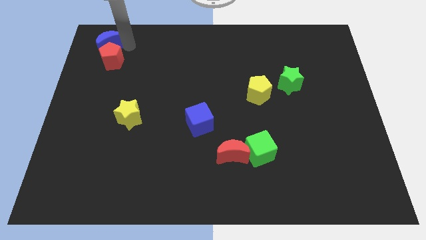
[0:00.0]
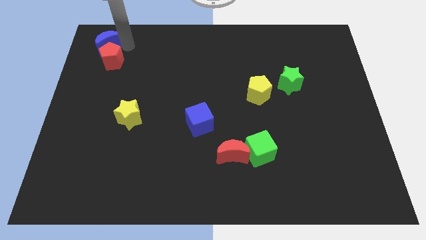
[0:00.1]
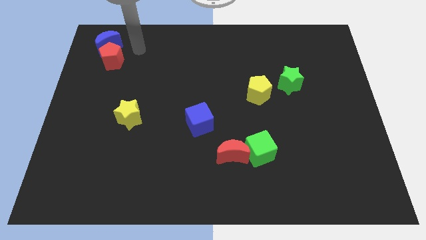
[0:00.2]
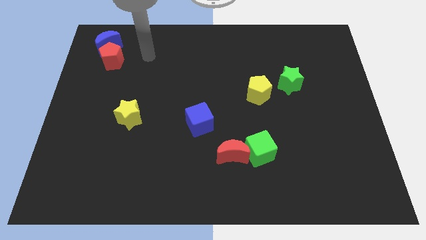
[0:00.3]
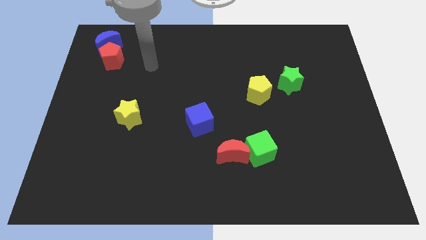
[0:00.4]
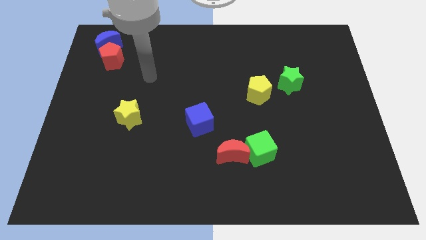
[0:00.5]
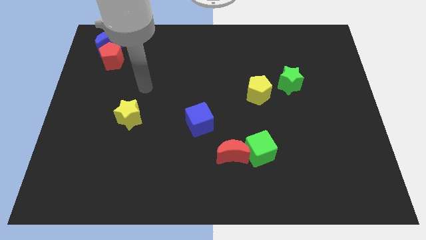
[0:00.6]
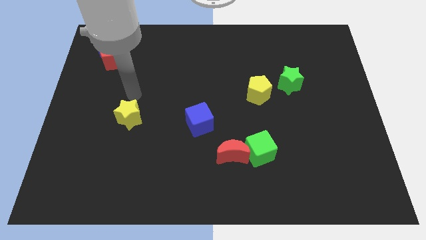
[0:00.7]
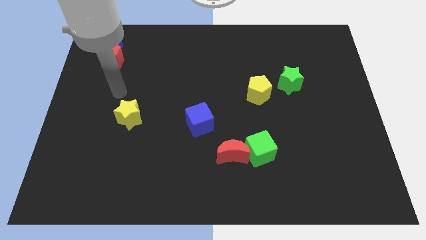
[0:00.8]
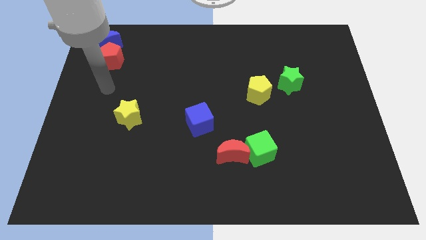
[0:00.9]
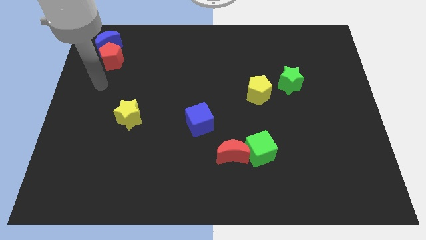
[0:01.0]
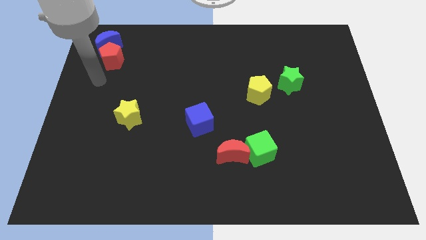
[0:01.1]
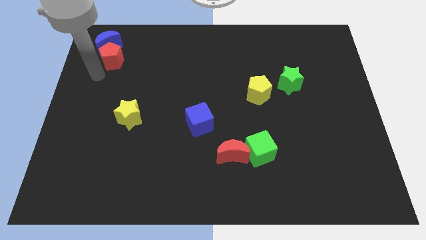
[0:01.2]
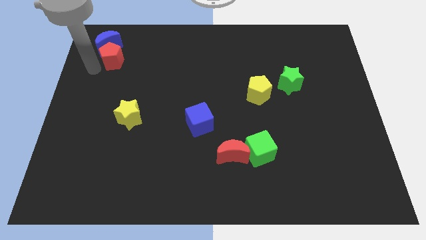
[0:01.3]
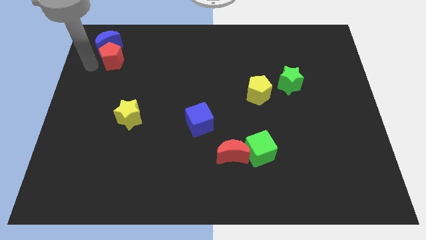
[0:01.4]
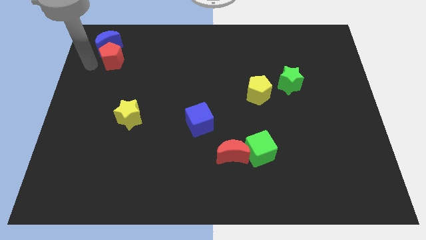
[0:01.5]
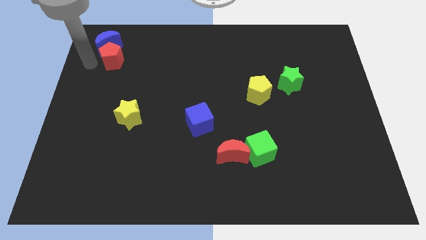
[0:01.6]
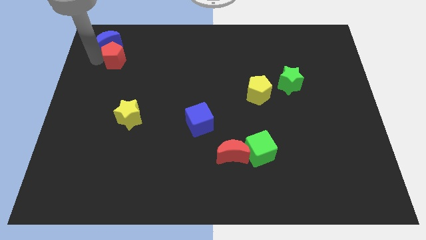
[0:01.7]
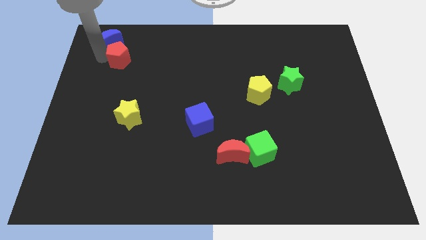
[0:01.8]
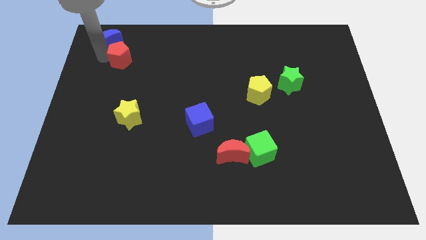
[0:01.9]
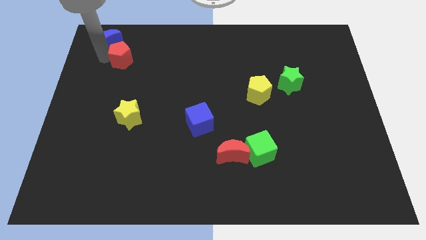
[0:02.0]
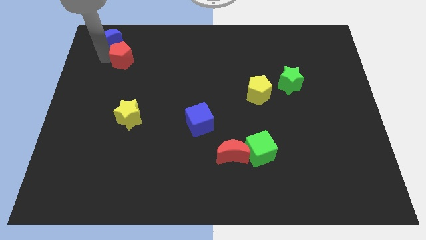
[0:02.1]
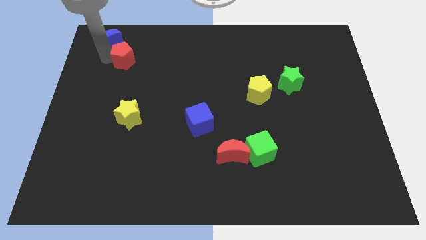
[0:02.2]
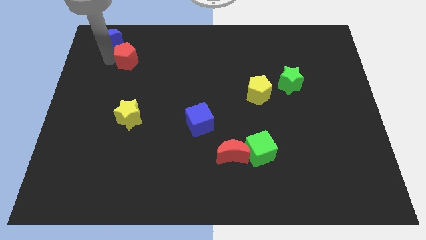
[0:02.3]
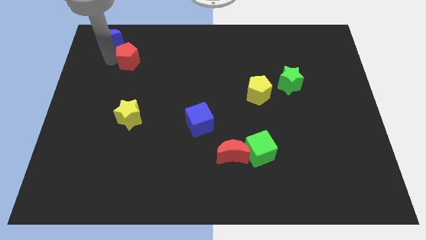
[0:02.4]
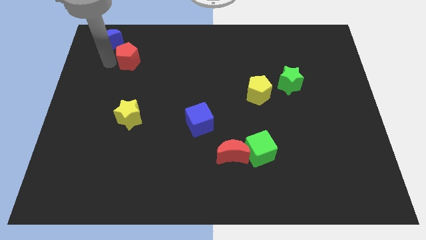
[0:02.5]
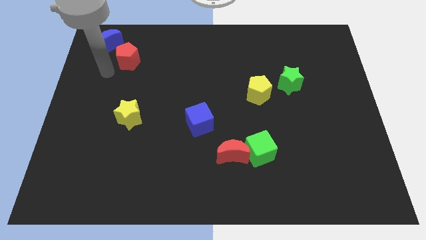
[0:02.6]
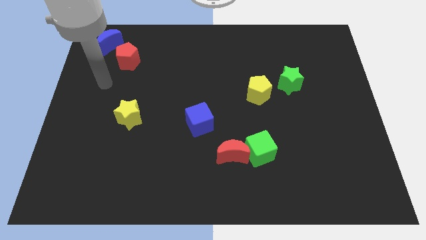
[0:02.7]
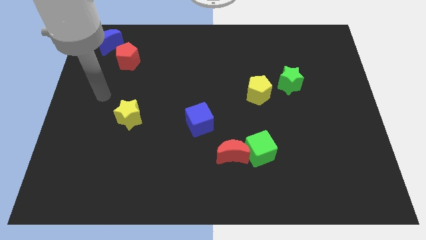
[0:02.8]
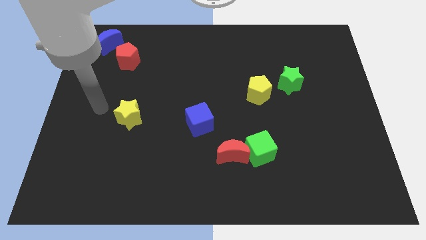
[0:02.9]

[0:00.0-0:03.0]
push red pentagon and blue crescent apart from each other

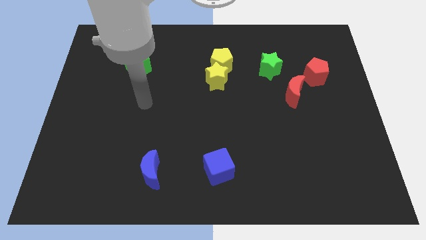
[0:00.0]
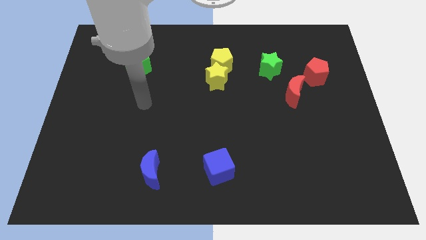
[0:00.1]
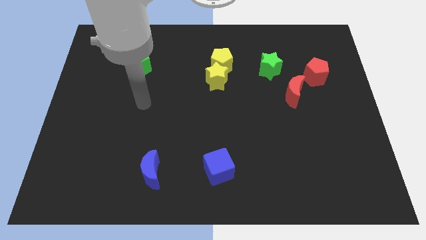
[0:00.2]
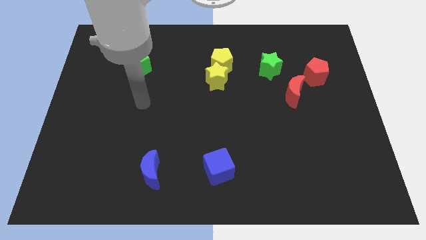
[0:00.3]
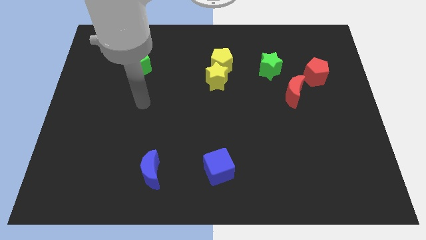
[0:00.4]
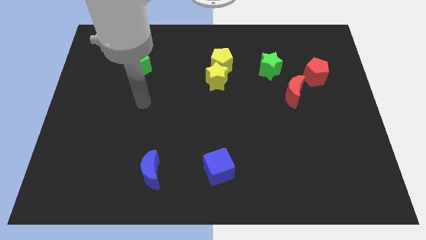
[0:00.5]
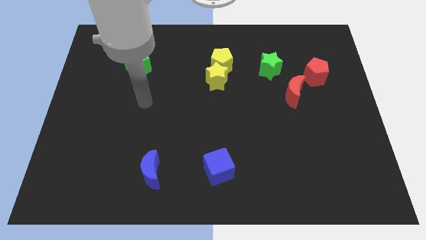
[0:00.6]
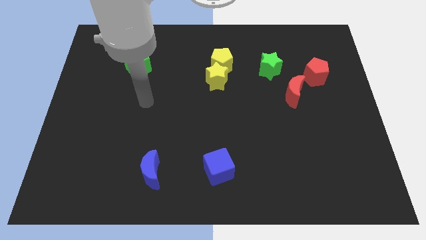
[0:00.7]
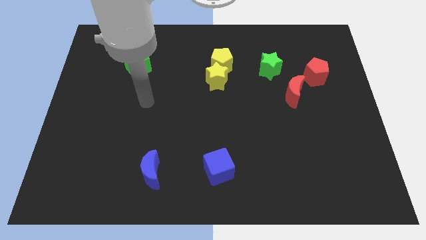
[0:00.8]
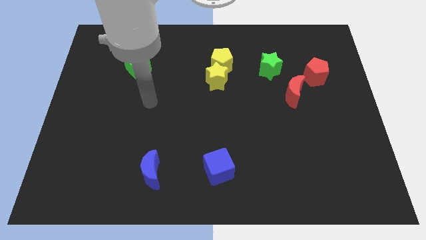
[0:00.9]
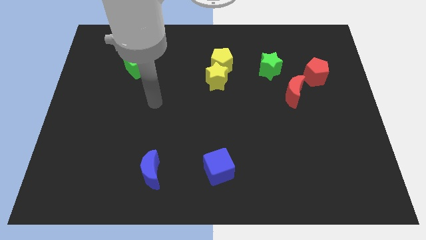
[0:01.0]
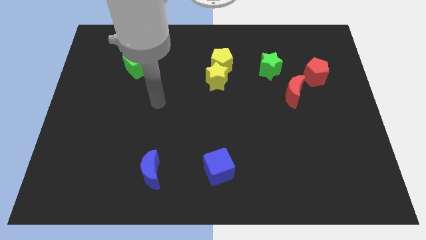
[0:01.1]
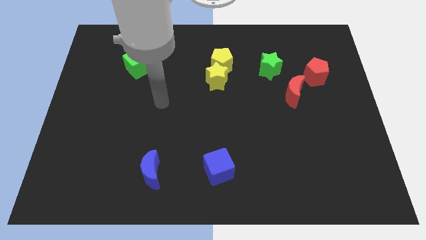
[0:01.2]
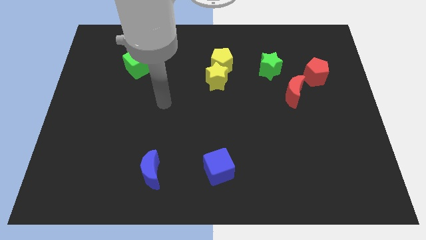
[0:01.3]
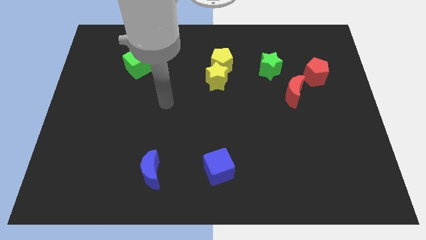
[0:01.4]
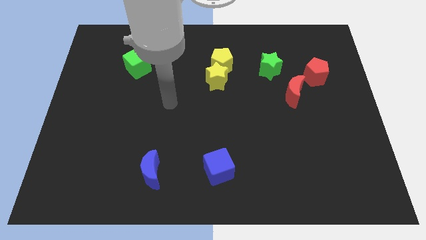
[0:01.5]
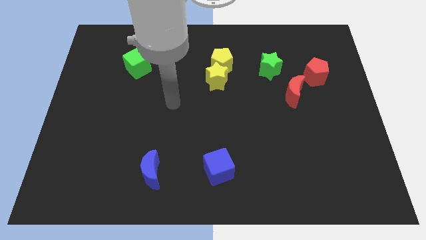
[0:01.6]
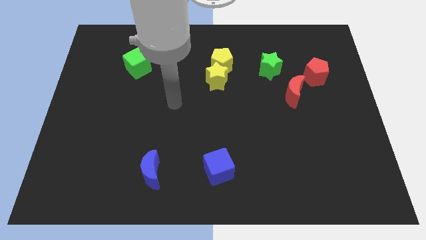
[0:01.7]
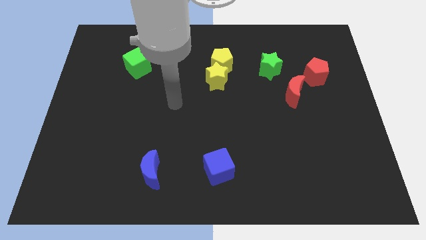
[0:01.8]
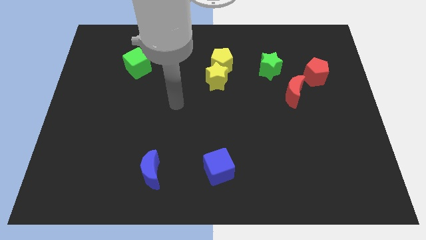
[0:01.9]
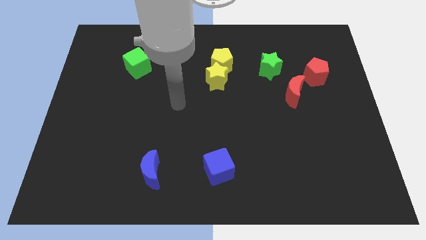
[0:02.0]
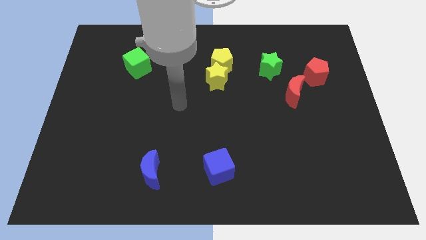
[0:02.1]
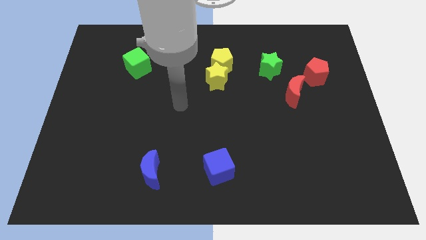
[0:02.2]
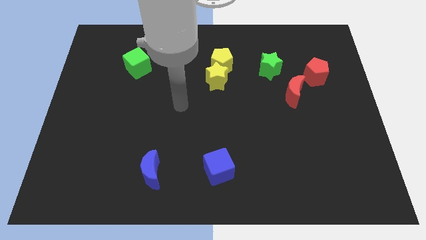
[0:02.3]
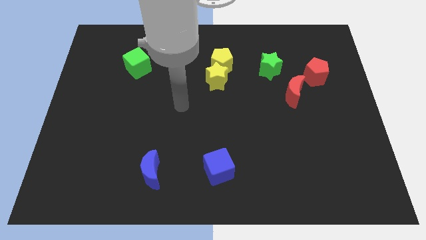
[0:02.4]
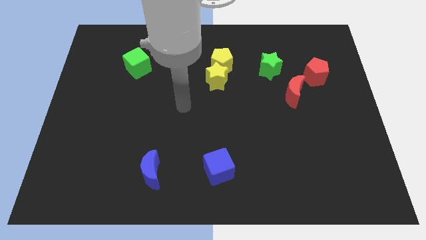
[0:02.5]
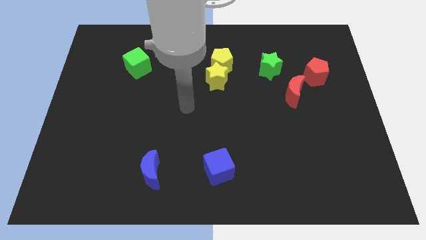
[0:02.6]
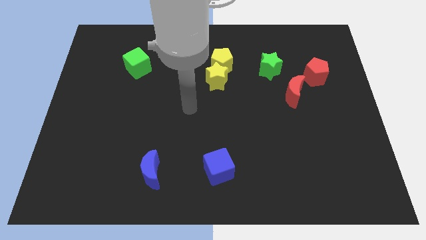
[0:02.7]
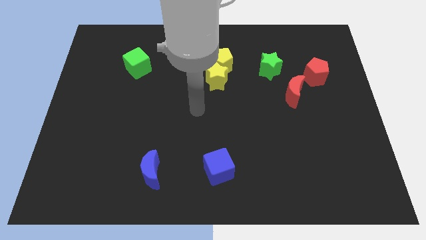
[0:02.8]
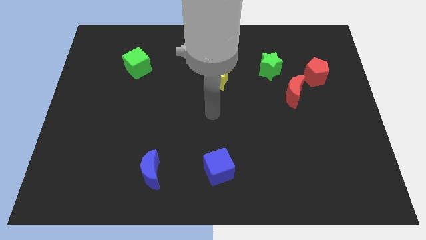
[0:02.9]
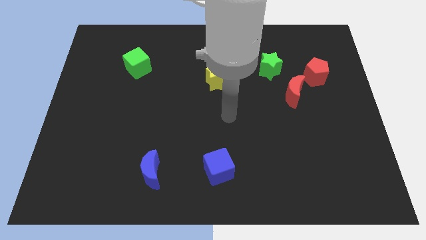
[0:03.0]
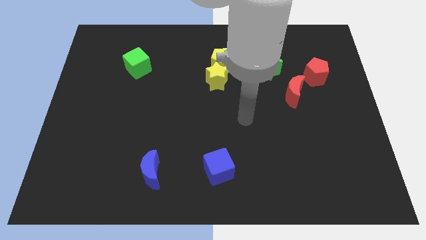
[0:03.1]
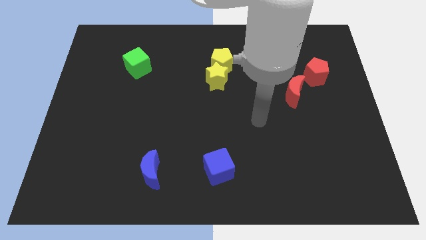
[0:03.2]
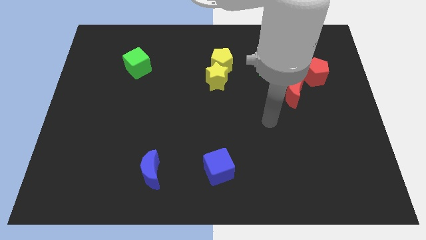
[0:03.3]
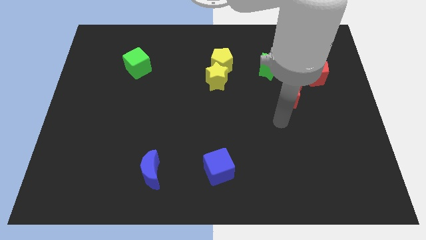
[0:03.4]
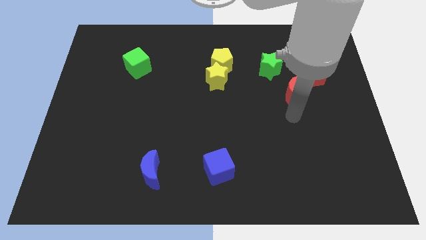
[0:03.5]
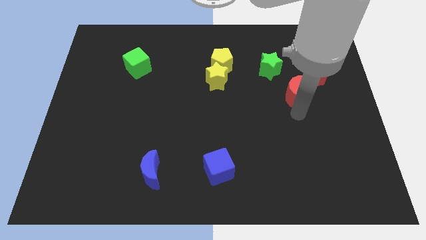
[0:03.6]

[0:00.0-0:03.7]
point your arm at the bottom of the red crescent

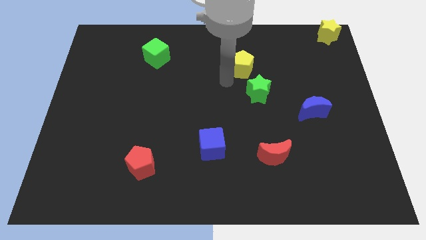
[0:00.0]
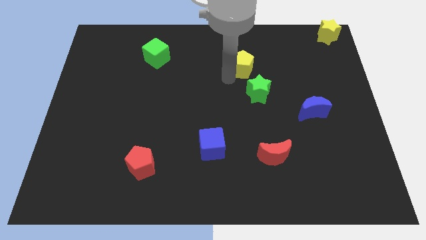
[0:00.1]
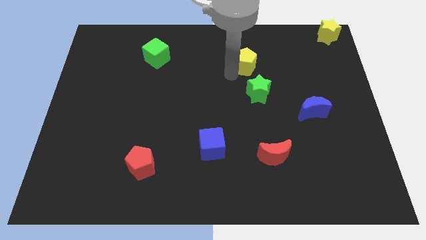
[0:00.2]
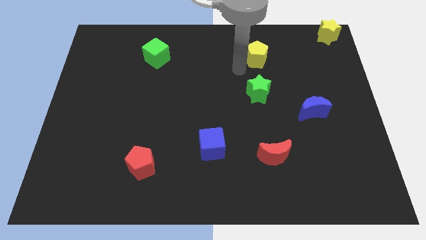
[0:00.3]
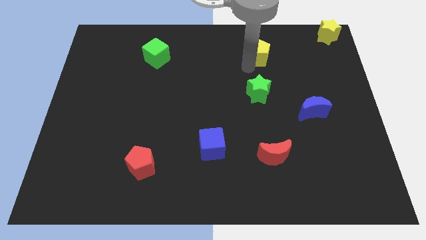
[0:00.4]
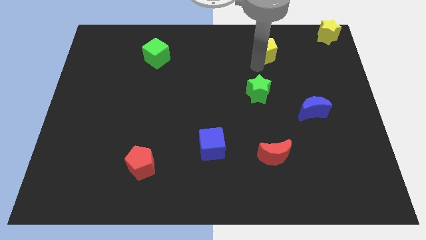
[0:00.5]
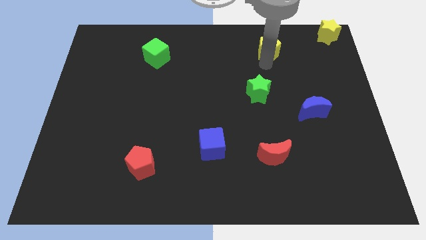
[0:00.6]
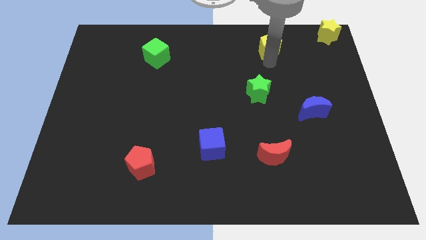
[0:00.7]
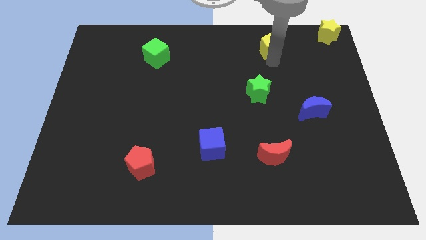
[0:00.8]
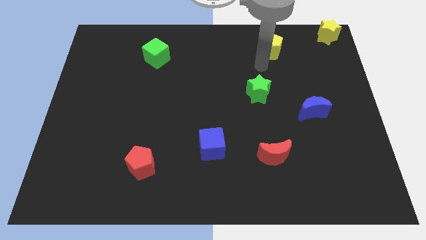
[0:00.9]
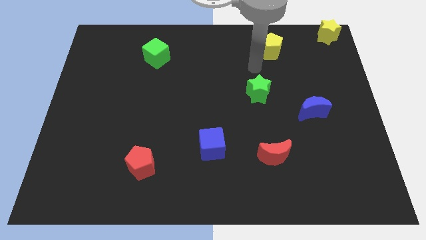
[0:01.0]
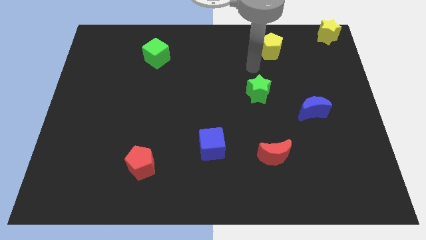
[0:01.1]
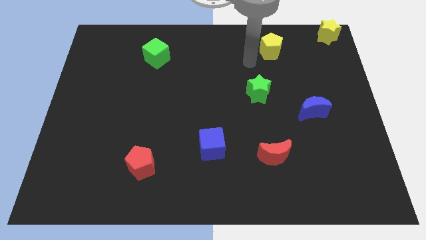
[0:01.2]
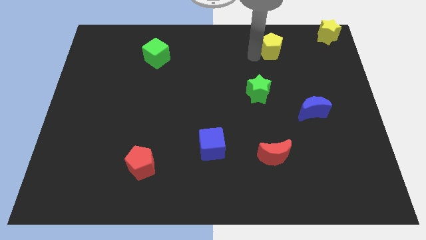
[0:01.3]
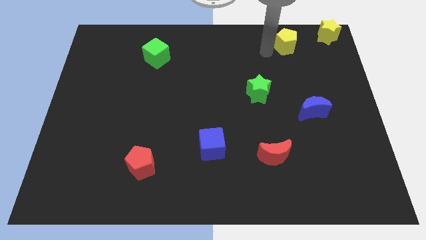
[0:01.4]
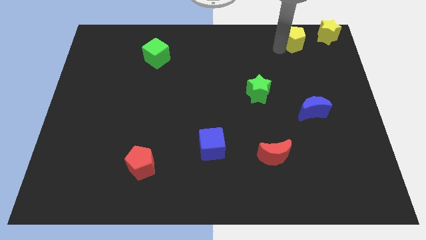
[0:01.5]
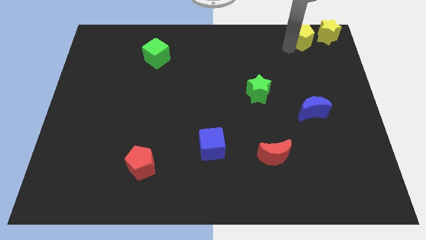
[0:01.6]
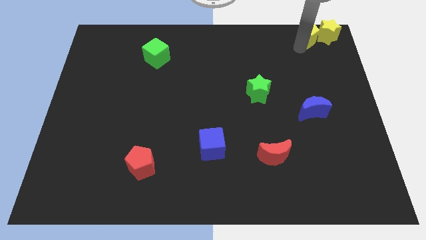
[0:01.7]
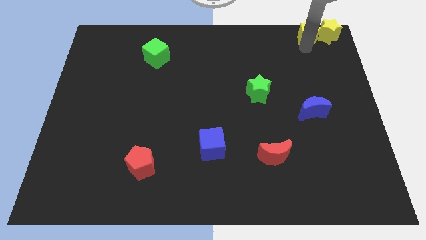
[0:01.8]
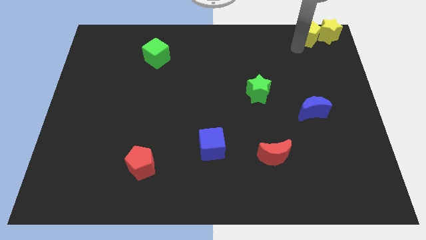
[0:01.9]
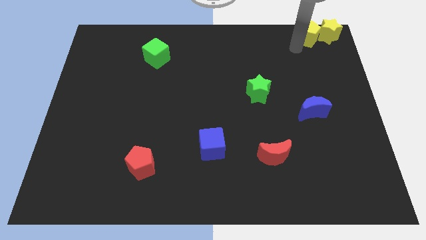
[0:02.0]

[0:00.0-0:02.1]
push the yellow pentagon towards the yellow star

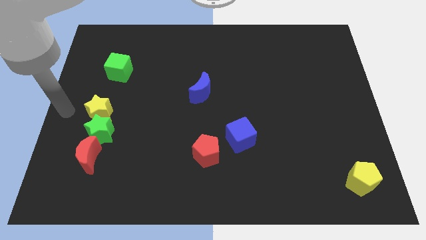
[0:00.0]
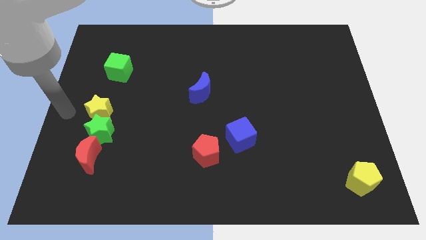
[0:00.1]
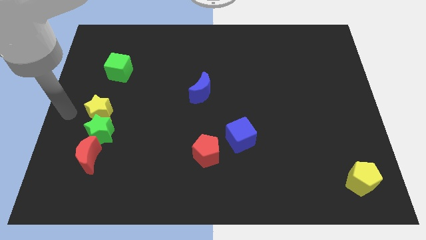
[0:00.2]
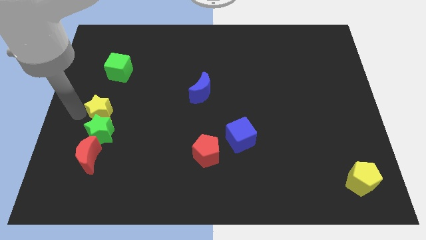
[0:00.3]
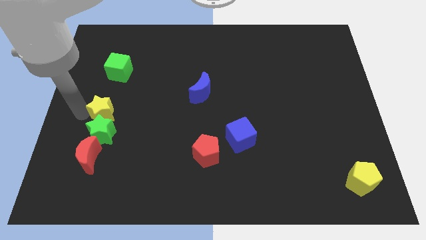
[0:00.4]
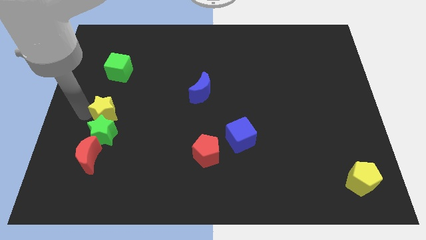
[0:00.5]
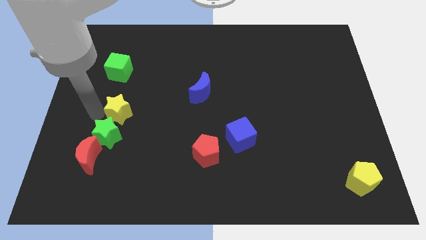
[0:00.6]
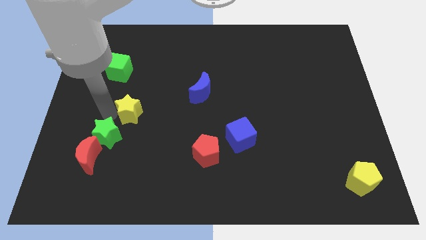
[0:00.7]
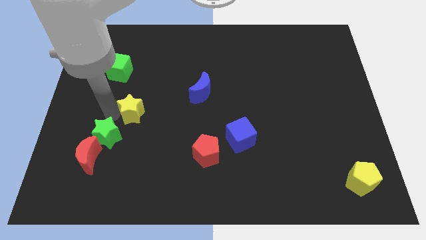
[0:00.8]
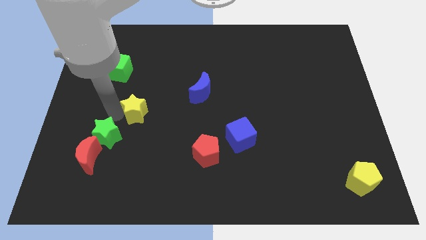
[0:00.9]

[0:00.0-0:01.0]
seperate yellow star from green star
